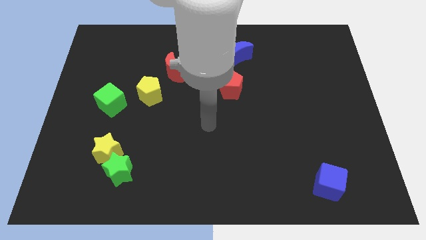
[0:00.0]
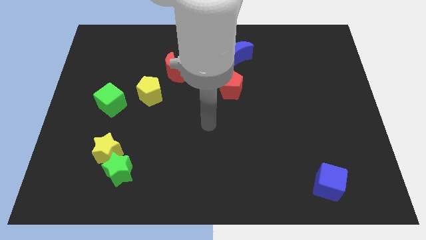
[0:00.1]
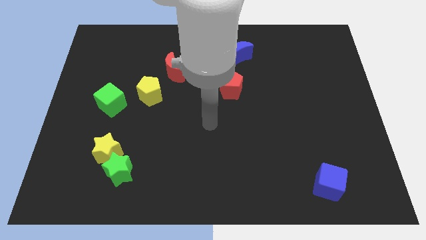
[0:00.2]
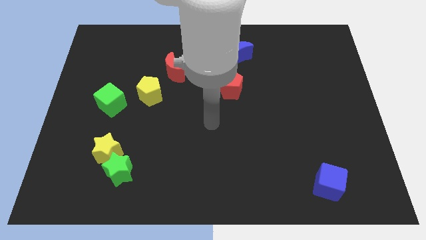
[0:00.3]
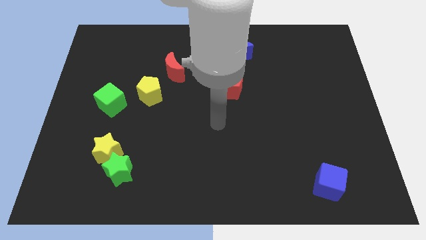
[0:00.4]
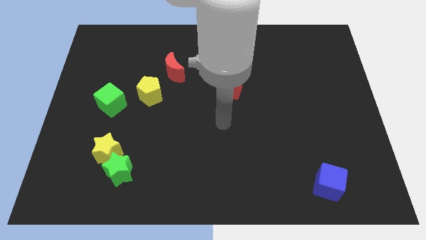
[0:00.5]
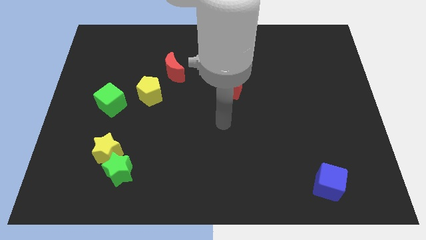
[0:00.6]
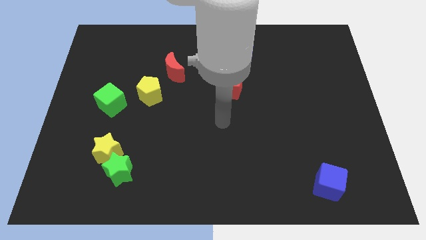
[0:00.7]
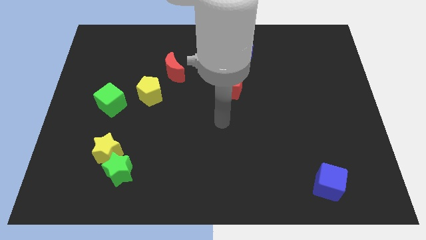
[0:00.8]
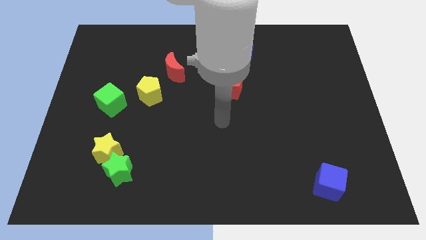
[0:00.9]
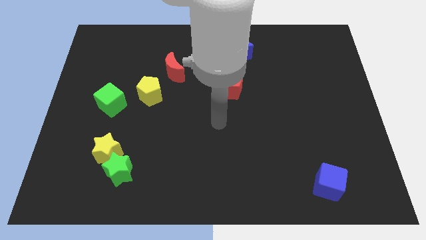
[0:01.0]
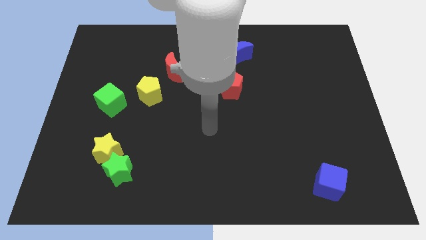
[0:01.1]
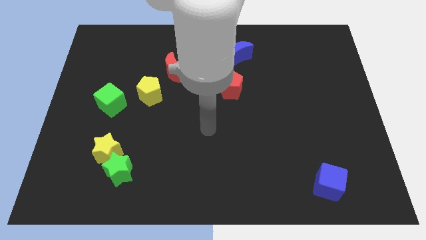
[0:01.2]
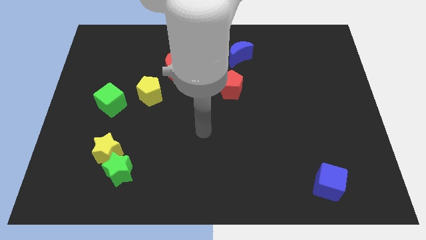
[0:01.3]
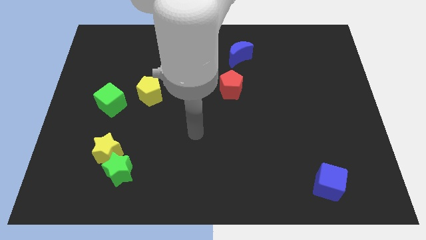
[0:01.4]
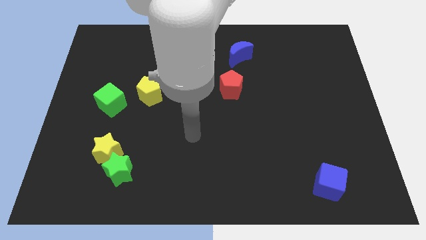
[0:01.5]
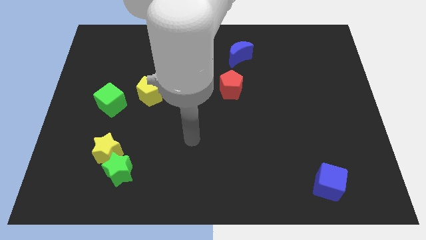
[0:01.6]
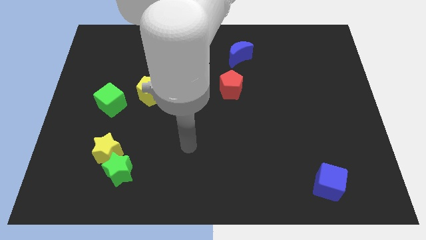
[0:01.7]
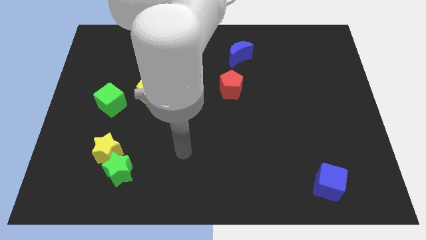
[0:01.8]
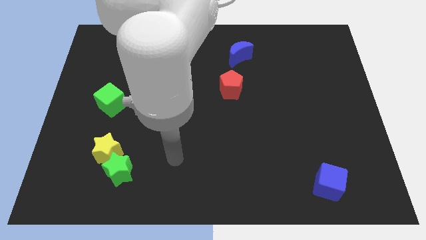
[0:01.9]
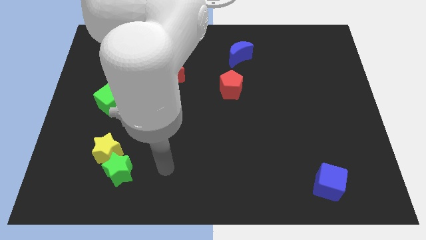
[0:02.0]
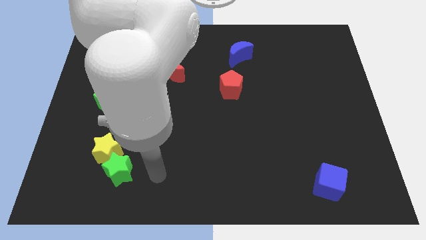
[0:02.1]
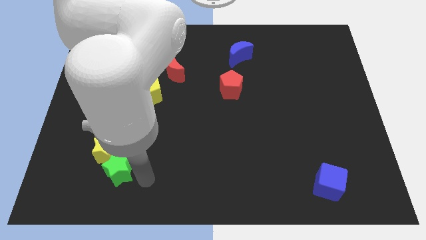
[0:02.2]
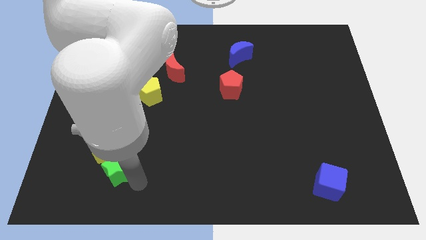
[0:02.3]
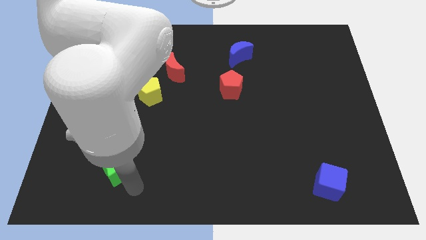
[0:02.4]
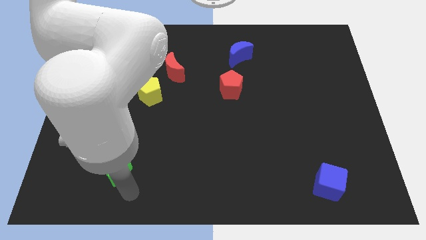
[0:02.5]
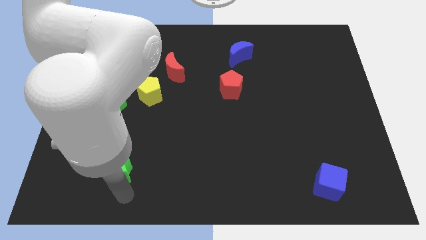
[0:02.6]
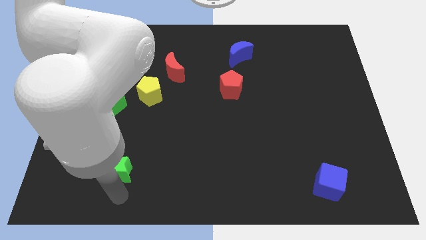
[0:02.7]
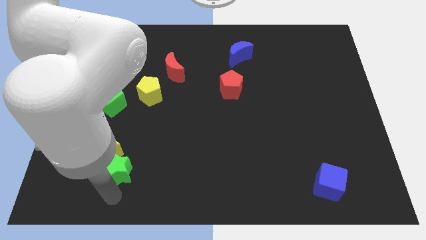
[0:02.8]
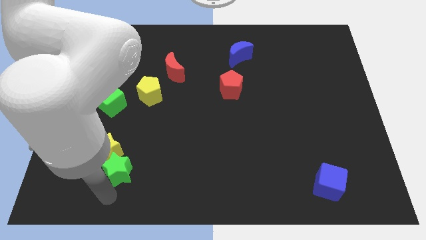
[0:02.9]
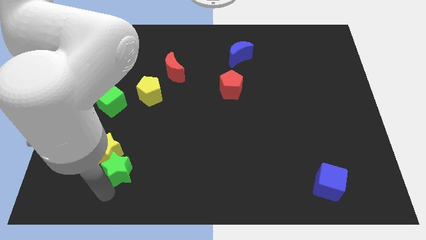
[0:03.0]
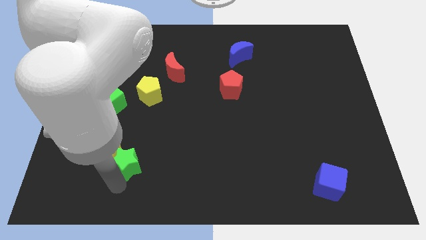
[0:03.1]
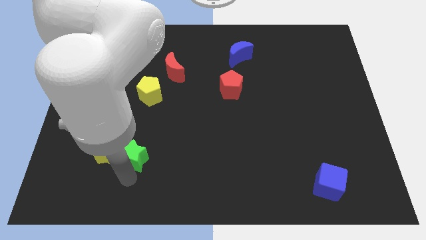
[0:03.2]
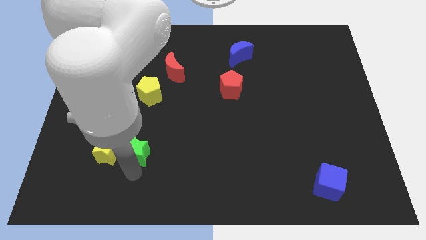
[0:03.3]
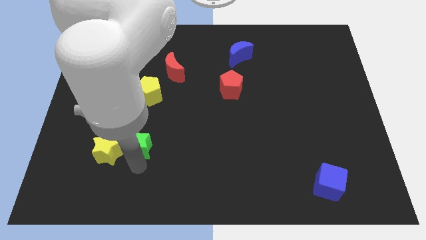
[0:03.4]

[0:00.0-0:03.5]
place the green star right to the yellow star

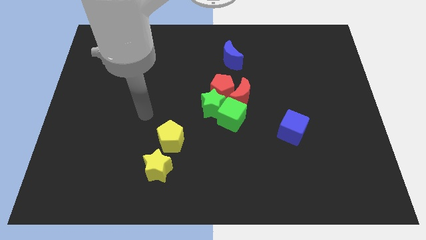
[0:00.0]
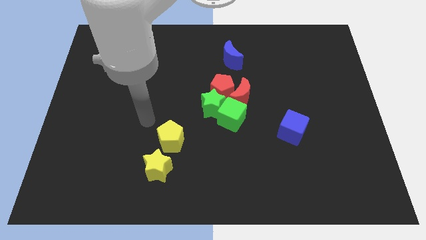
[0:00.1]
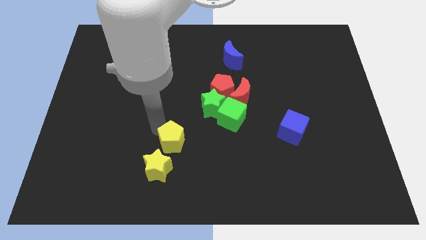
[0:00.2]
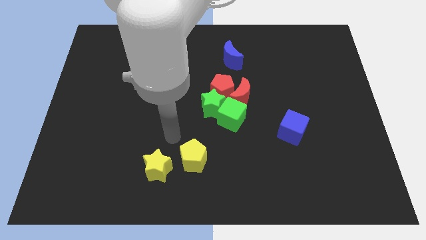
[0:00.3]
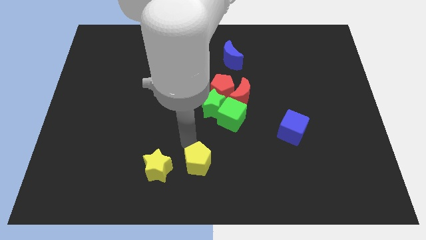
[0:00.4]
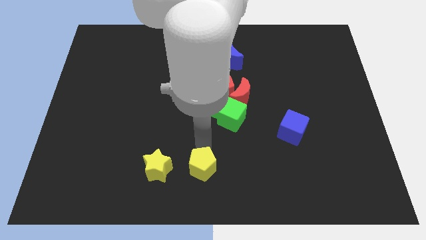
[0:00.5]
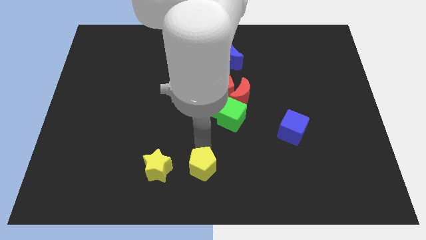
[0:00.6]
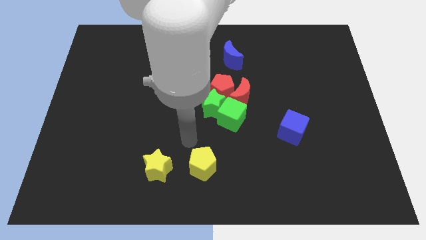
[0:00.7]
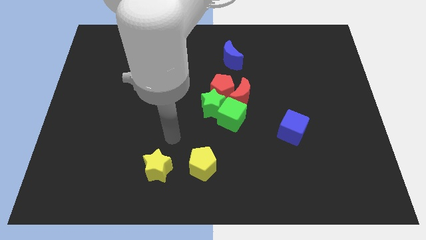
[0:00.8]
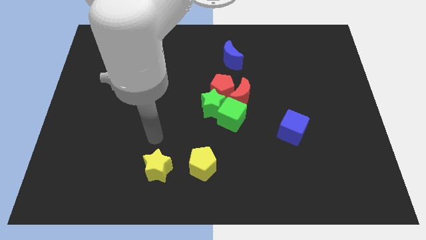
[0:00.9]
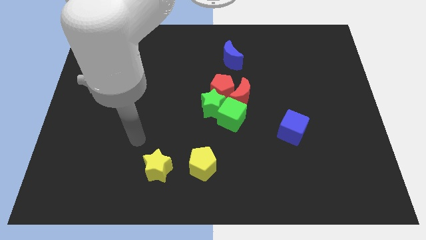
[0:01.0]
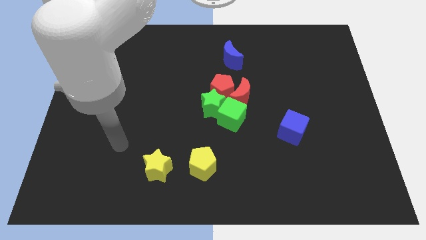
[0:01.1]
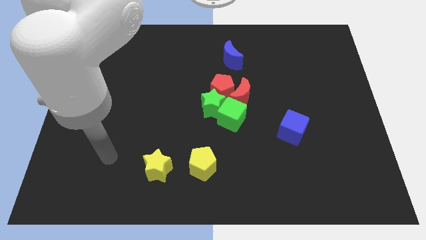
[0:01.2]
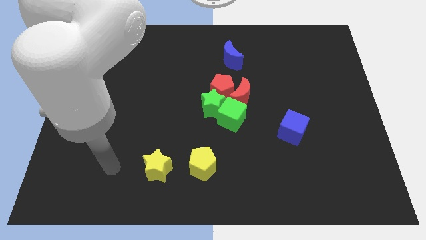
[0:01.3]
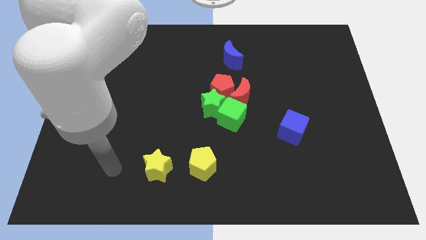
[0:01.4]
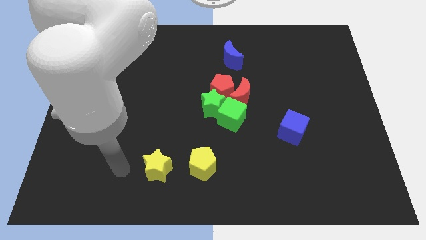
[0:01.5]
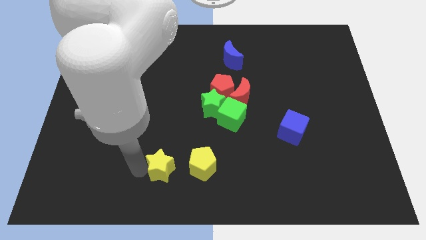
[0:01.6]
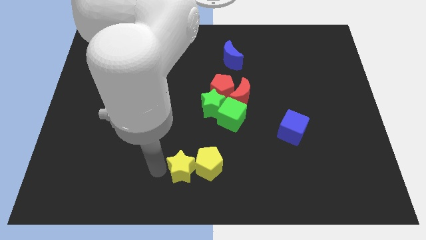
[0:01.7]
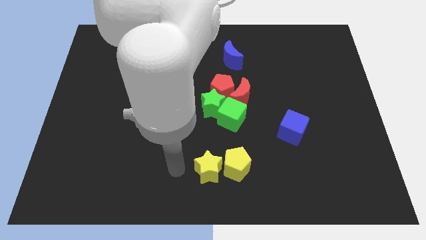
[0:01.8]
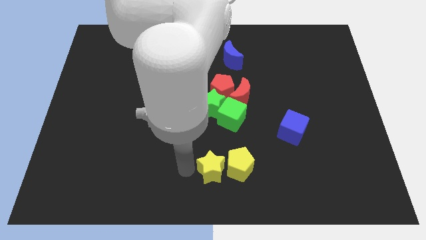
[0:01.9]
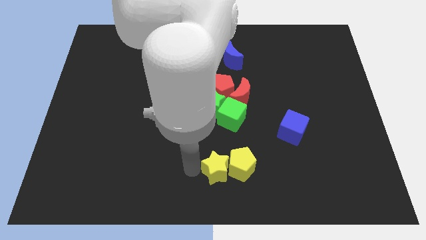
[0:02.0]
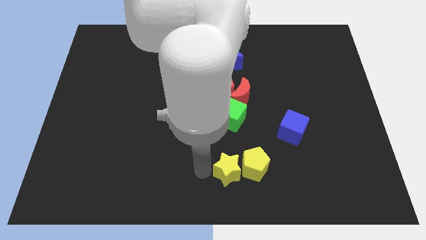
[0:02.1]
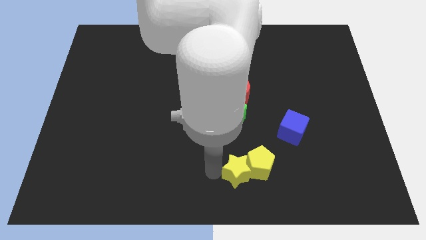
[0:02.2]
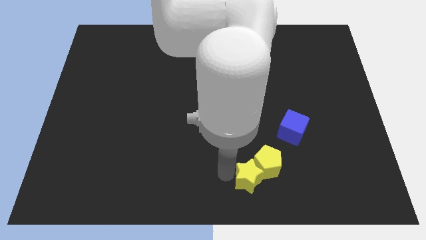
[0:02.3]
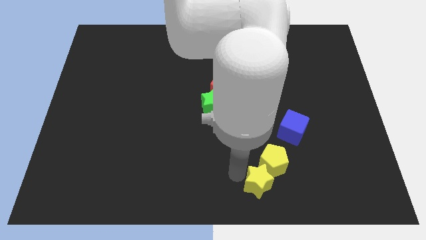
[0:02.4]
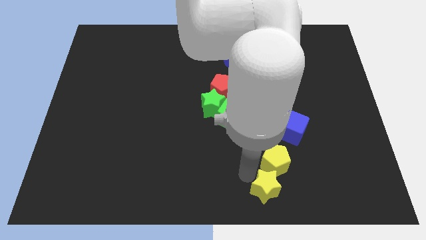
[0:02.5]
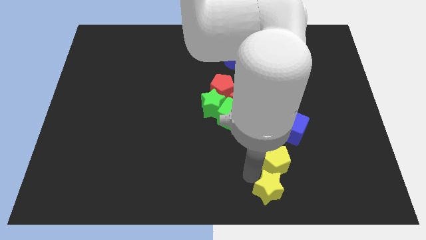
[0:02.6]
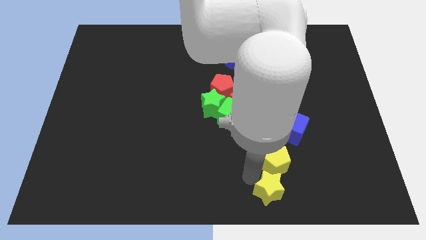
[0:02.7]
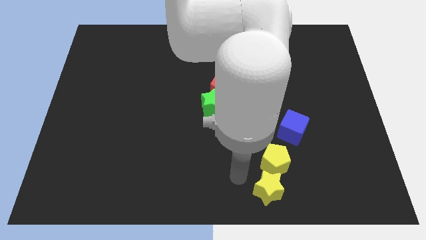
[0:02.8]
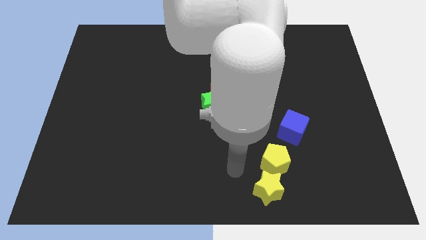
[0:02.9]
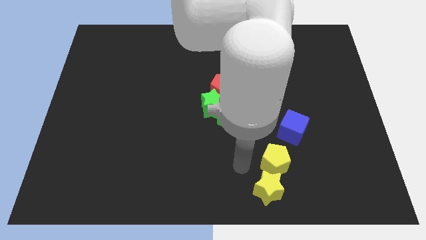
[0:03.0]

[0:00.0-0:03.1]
place the yellow pentagon in between the blue cube and yellow star

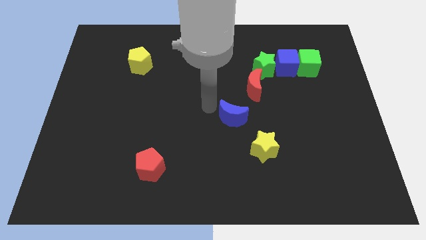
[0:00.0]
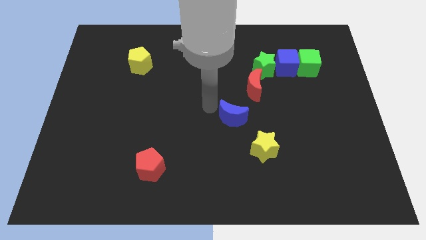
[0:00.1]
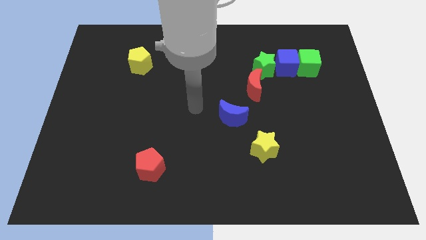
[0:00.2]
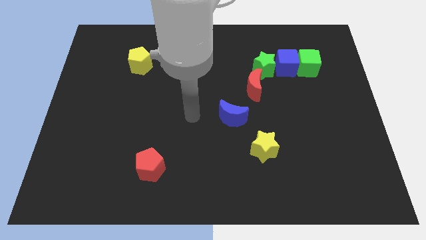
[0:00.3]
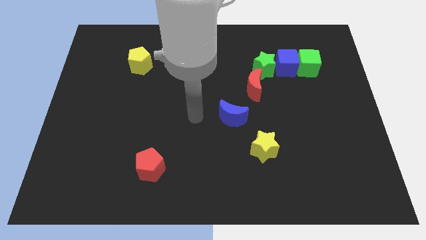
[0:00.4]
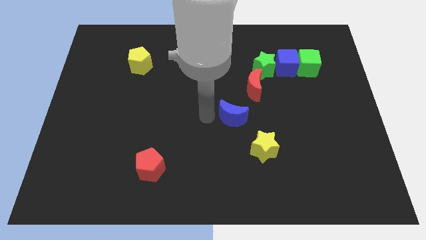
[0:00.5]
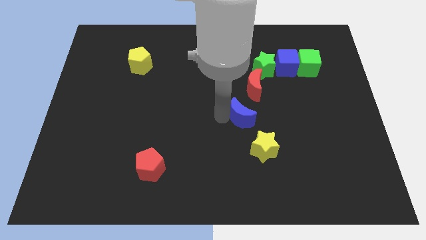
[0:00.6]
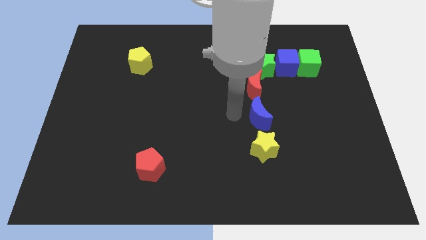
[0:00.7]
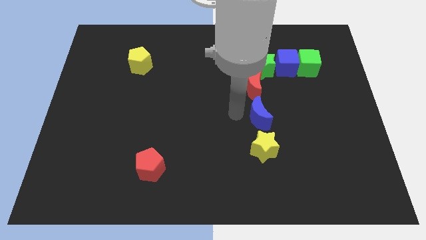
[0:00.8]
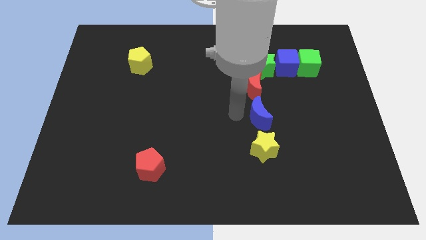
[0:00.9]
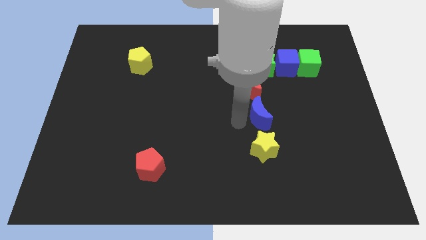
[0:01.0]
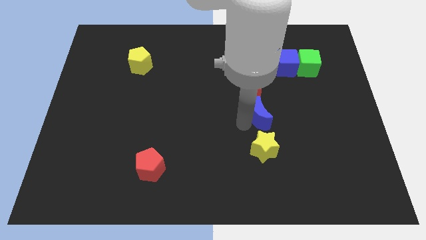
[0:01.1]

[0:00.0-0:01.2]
place blue crescent in between the yellow star and red crescent

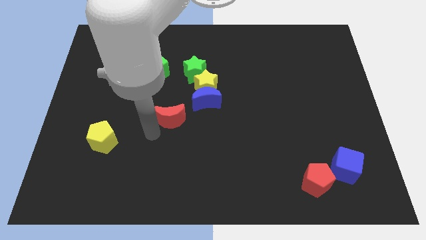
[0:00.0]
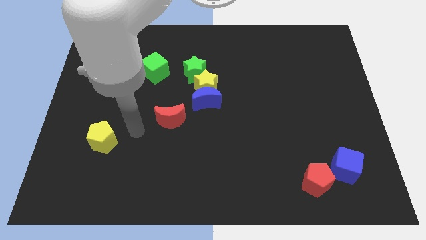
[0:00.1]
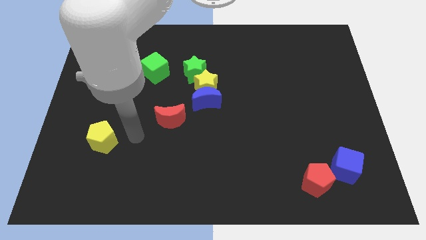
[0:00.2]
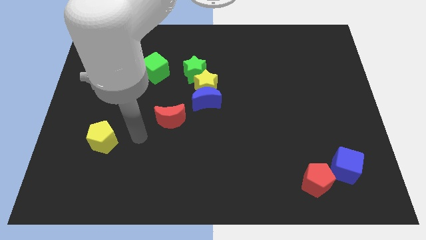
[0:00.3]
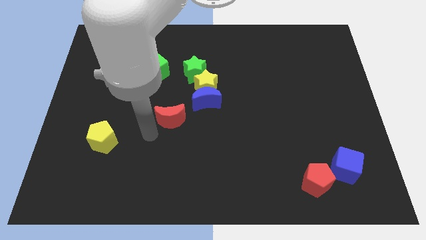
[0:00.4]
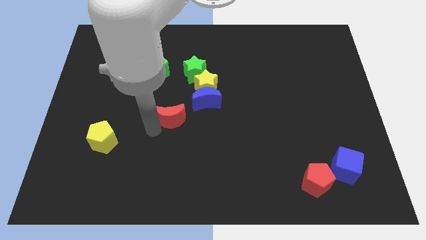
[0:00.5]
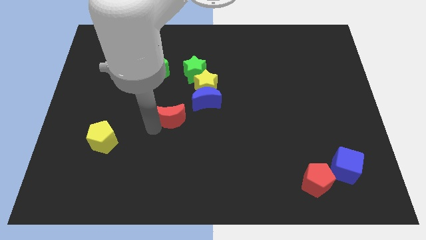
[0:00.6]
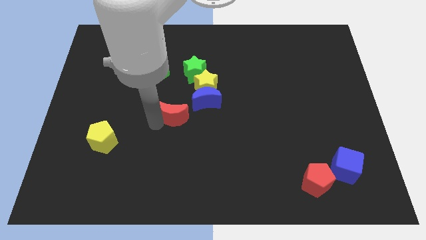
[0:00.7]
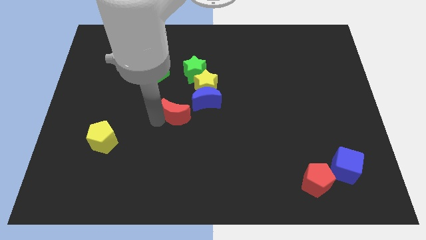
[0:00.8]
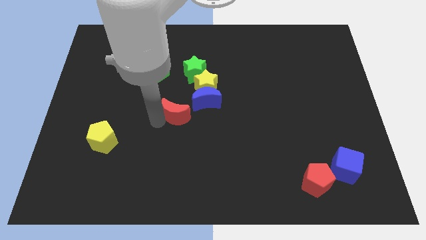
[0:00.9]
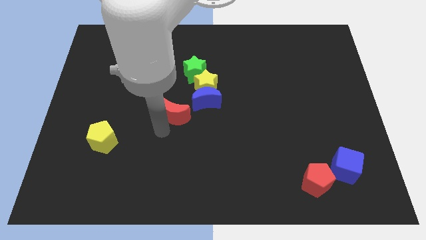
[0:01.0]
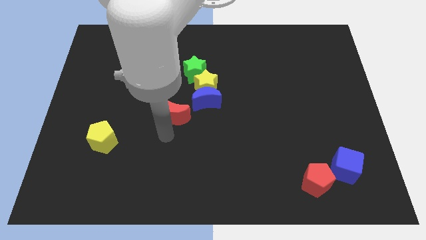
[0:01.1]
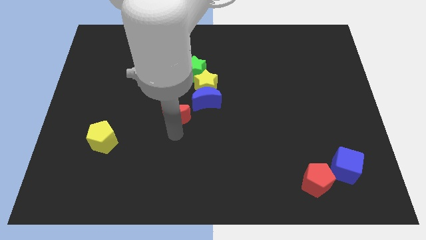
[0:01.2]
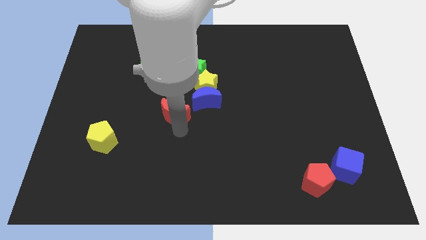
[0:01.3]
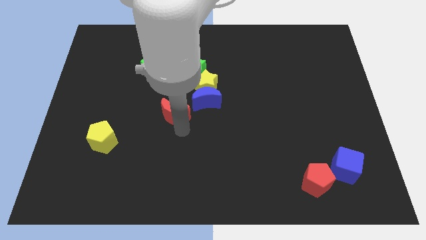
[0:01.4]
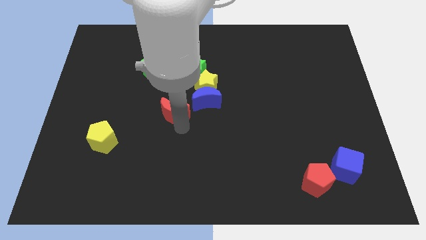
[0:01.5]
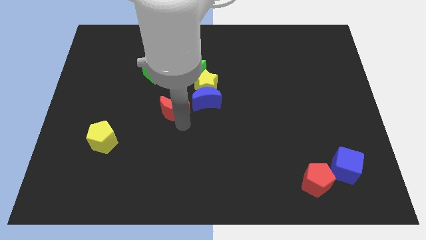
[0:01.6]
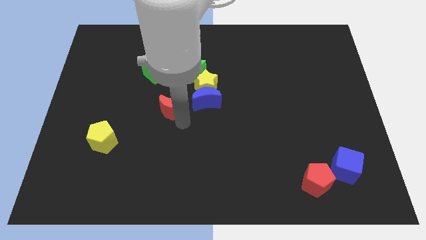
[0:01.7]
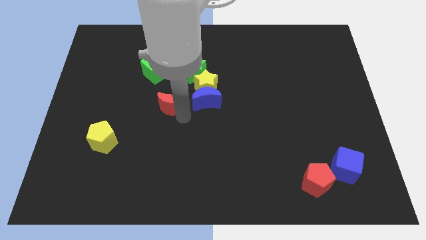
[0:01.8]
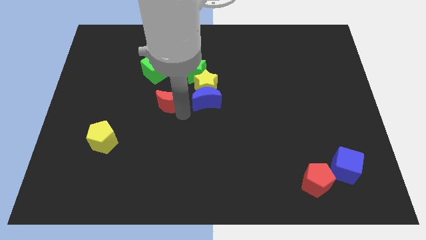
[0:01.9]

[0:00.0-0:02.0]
place the red crescent to the left side blue crescent
